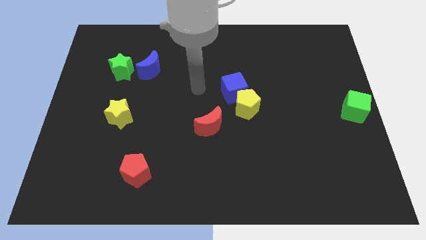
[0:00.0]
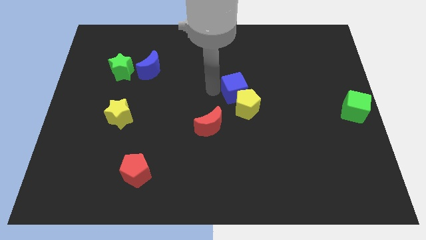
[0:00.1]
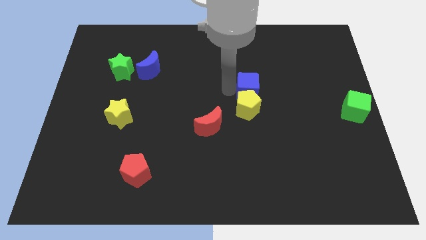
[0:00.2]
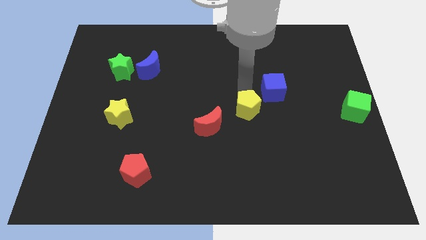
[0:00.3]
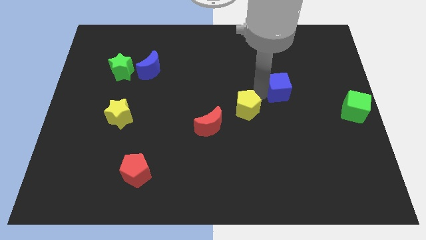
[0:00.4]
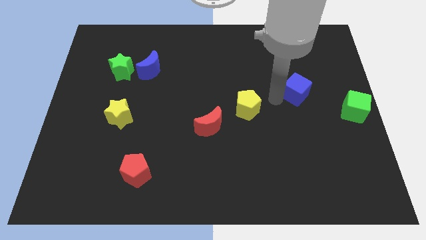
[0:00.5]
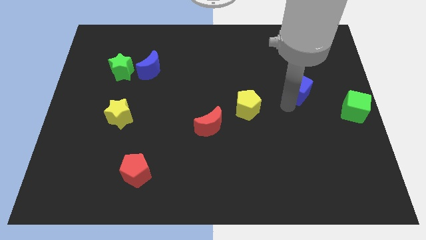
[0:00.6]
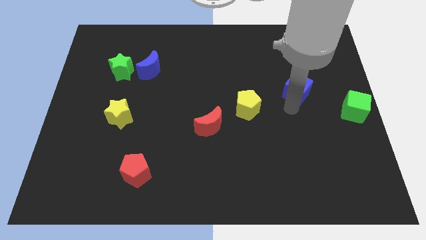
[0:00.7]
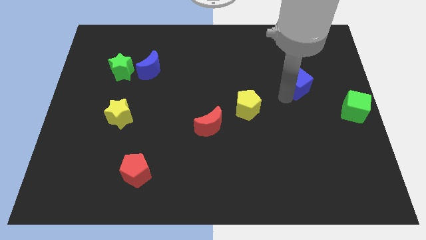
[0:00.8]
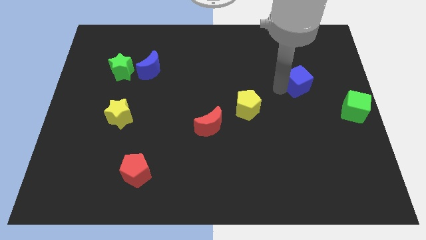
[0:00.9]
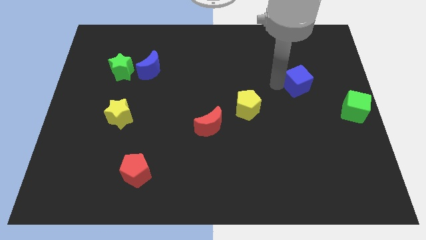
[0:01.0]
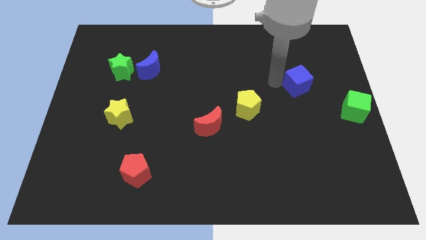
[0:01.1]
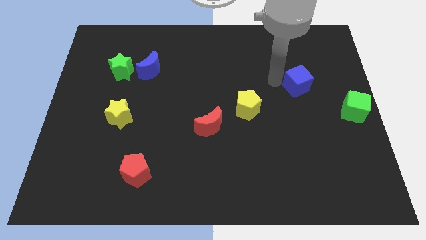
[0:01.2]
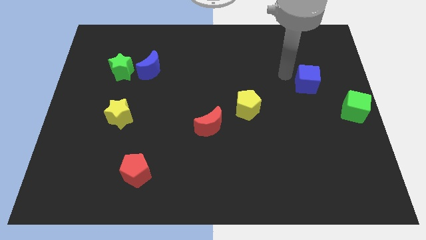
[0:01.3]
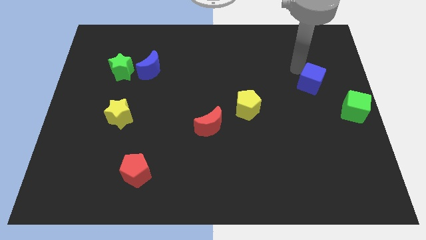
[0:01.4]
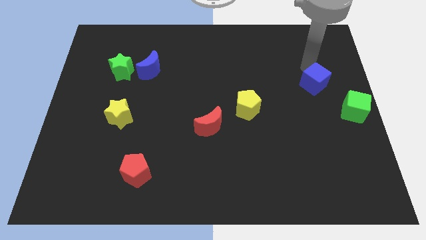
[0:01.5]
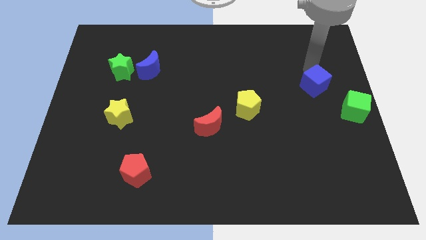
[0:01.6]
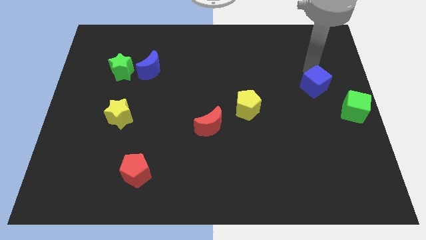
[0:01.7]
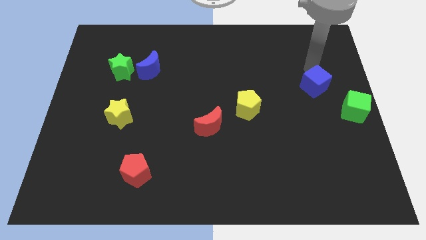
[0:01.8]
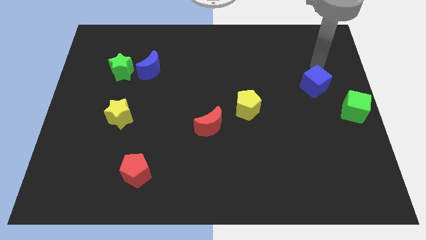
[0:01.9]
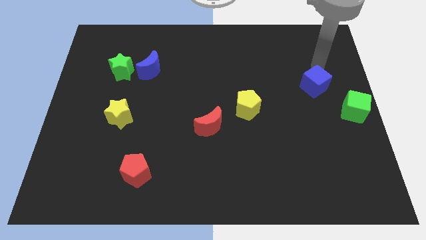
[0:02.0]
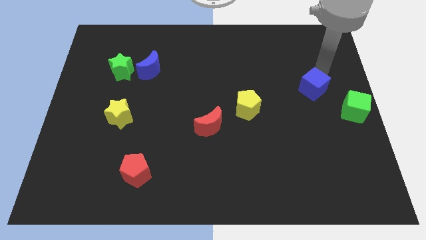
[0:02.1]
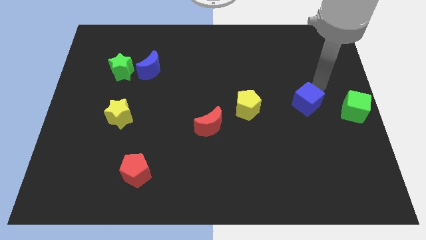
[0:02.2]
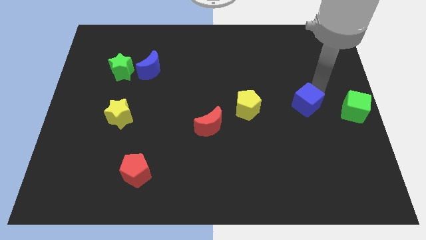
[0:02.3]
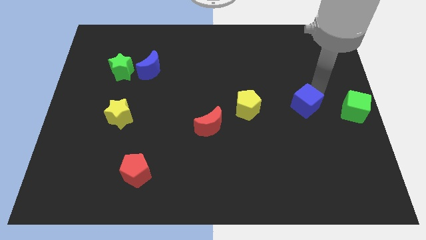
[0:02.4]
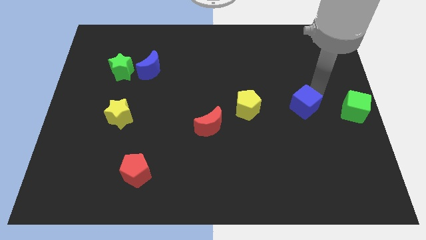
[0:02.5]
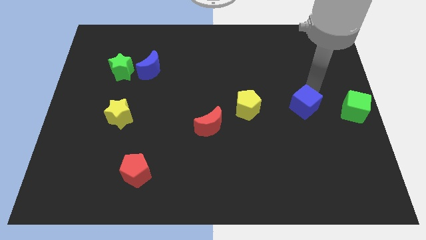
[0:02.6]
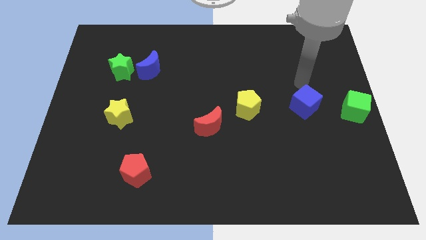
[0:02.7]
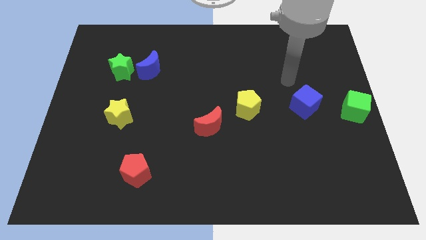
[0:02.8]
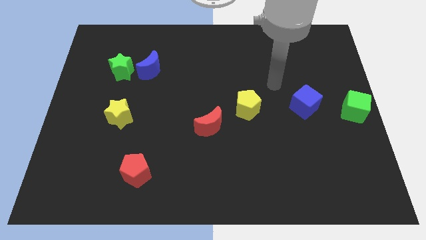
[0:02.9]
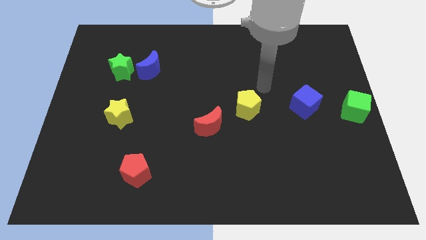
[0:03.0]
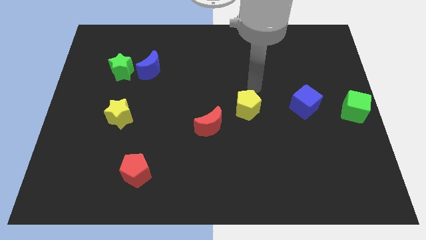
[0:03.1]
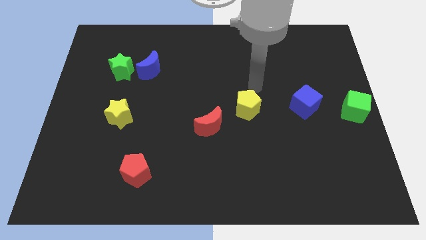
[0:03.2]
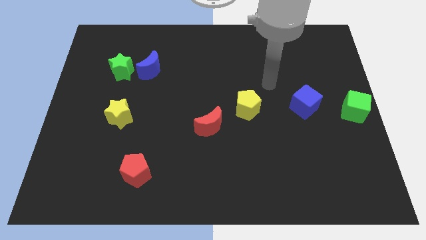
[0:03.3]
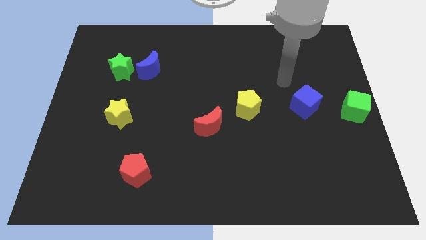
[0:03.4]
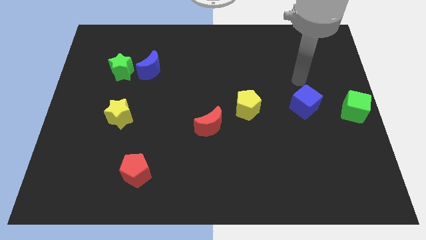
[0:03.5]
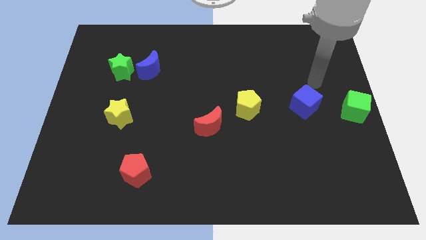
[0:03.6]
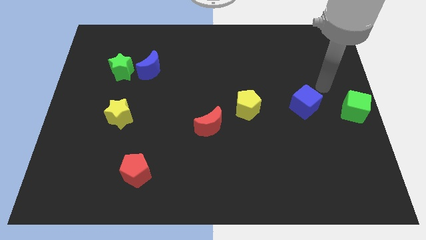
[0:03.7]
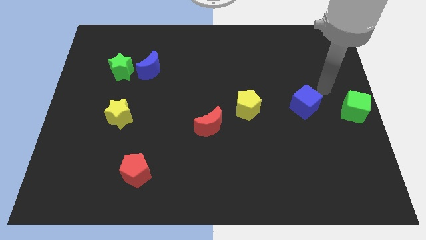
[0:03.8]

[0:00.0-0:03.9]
push the blue cube to the left of the green cube

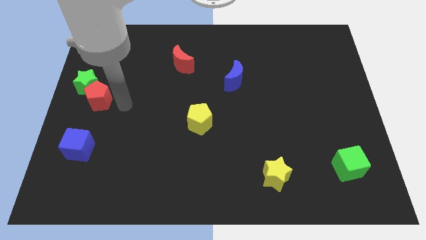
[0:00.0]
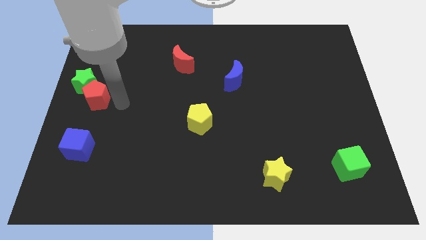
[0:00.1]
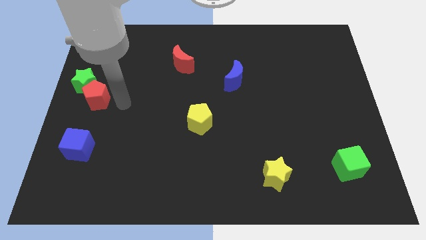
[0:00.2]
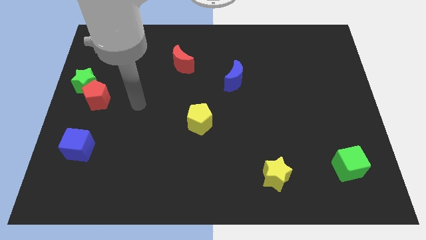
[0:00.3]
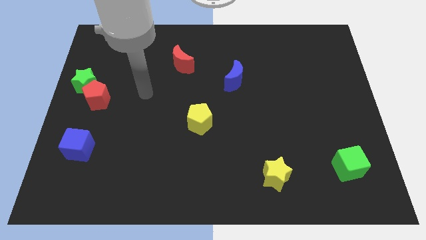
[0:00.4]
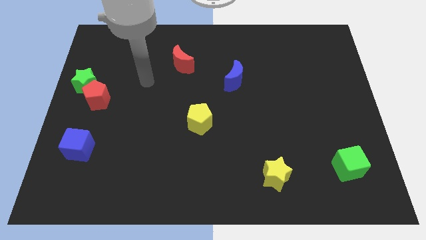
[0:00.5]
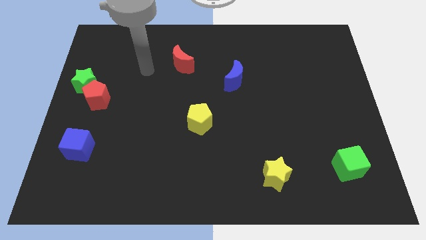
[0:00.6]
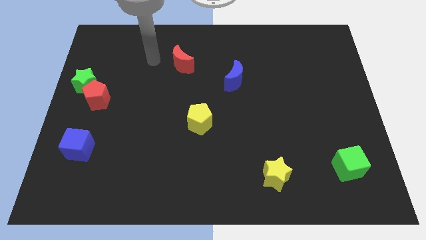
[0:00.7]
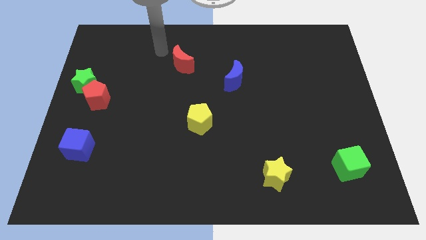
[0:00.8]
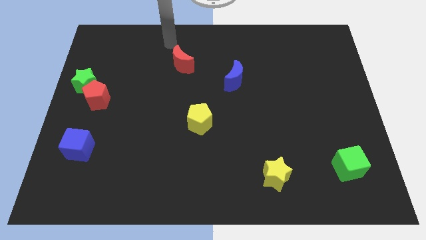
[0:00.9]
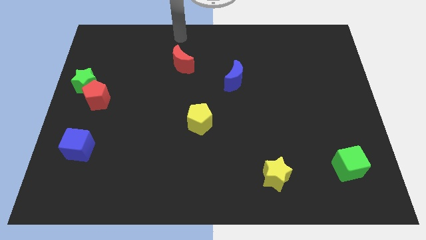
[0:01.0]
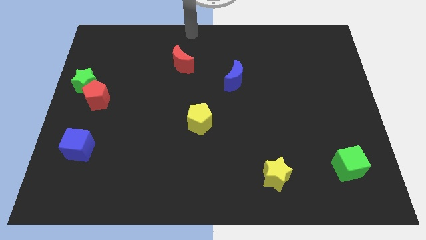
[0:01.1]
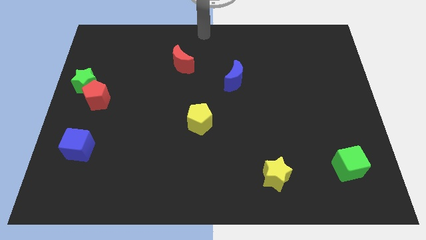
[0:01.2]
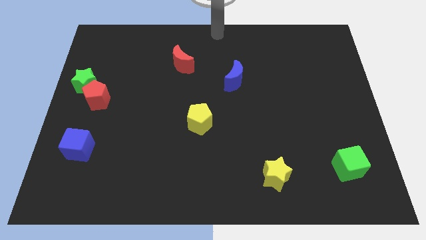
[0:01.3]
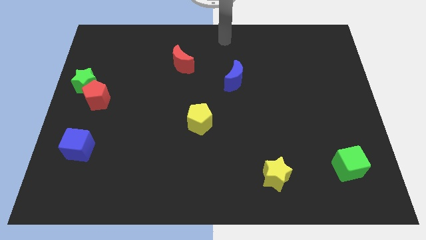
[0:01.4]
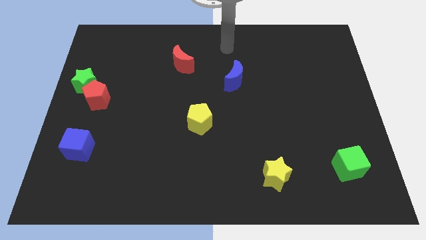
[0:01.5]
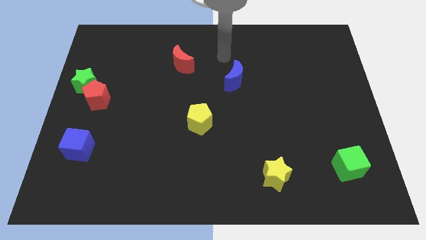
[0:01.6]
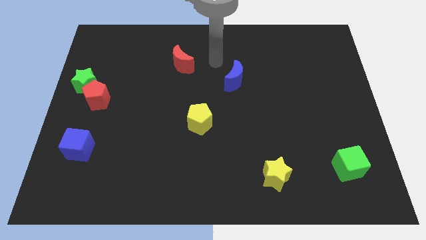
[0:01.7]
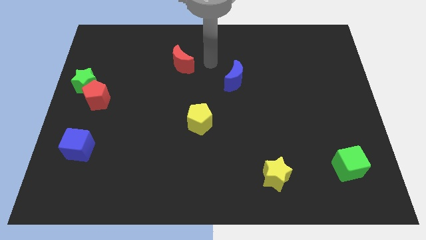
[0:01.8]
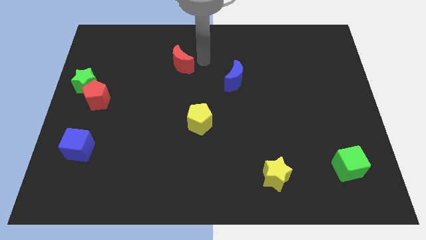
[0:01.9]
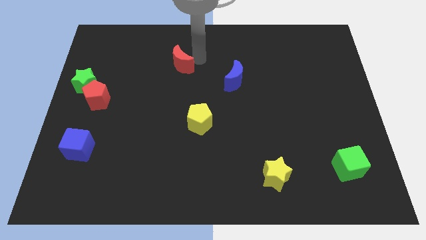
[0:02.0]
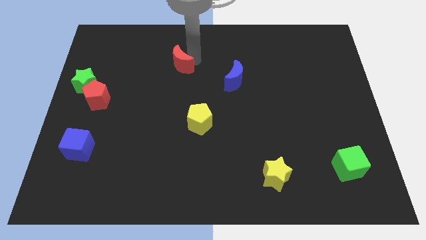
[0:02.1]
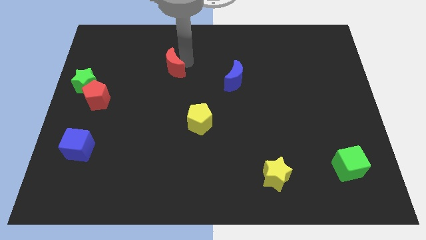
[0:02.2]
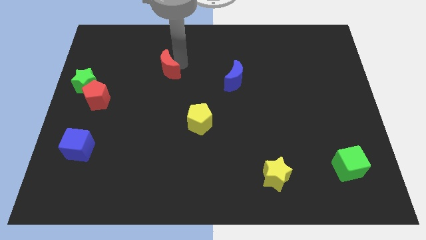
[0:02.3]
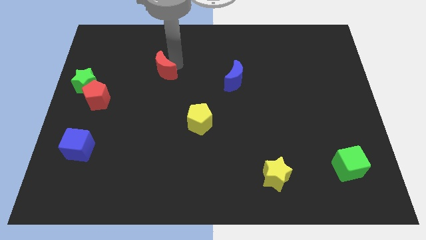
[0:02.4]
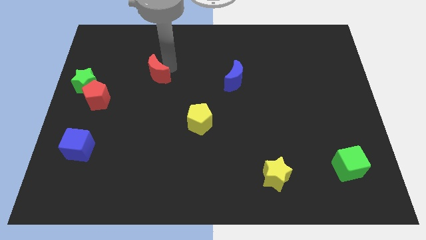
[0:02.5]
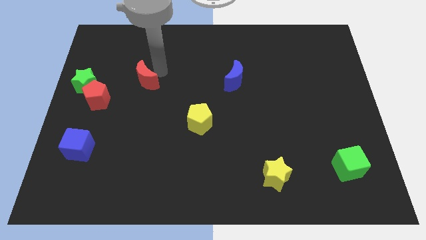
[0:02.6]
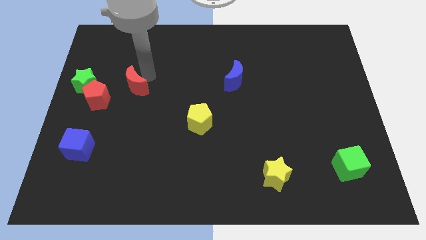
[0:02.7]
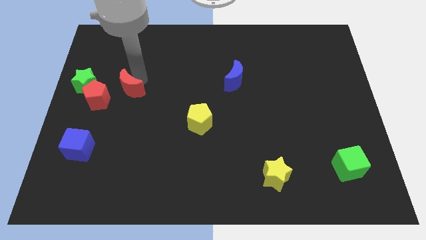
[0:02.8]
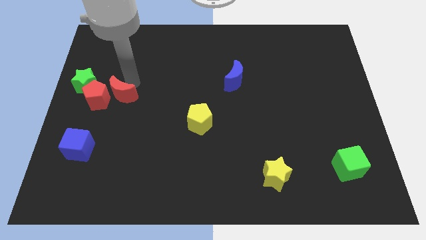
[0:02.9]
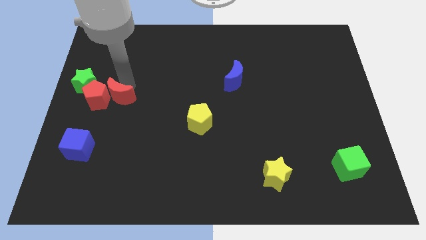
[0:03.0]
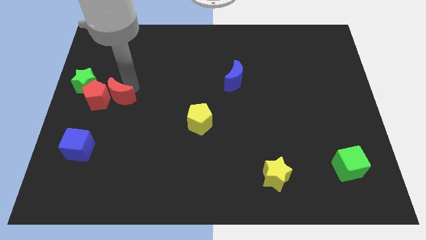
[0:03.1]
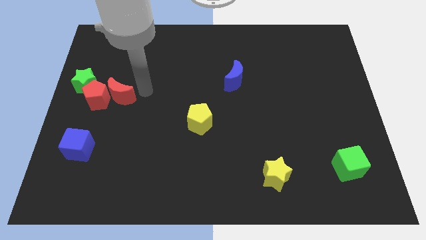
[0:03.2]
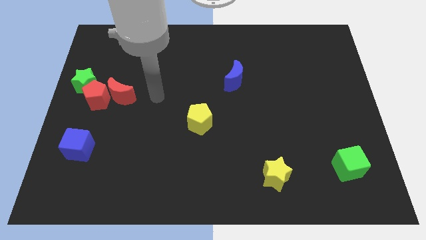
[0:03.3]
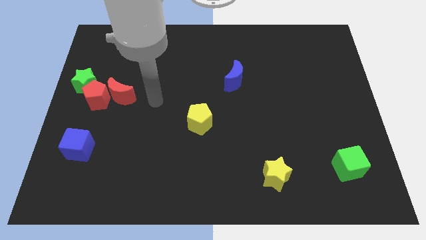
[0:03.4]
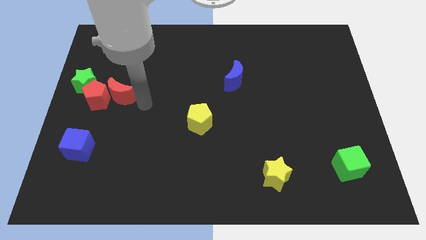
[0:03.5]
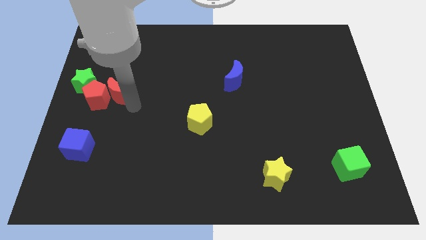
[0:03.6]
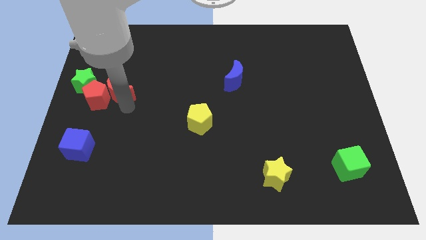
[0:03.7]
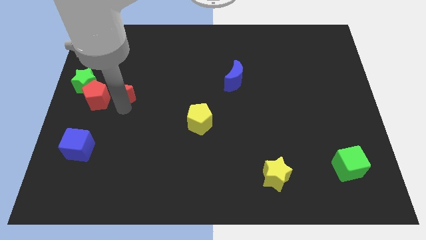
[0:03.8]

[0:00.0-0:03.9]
move your arm away from the red pentagon

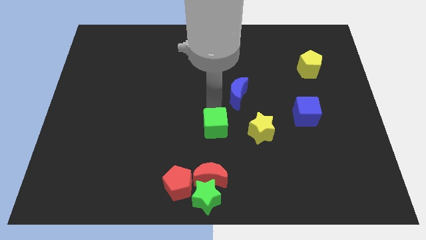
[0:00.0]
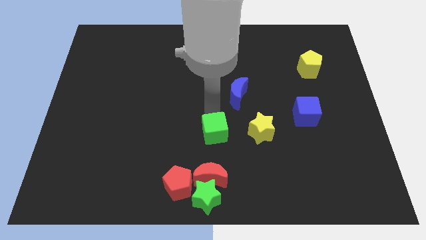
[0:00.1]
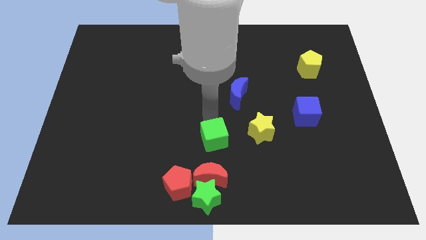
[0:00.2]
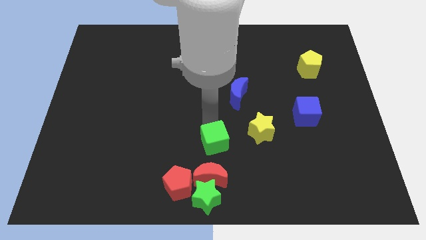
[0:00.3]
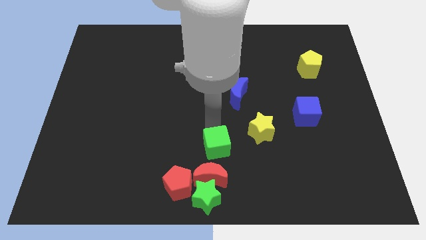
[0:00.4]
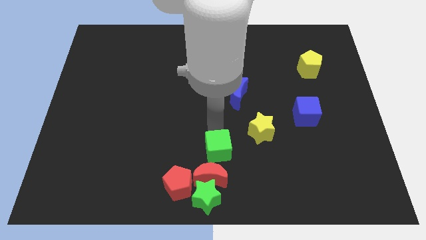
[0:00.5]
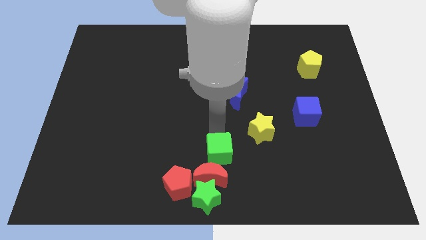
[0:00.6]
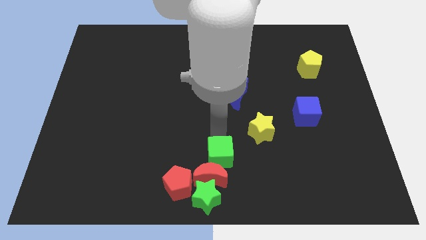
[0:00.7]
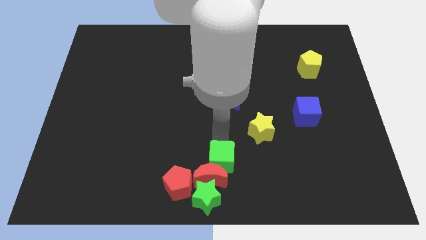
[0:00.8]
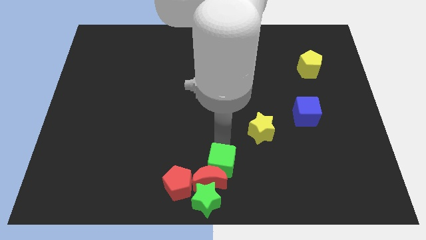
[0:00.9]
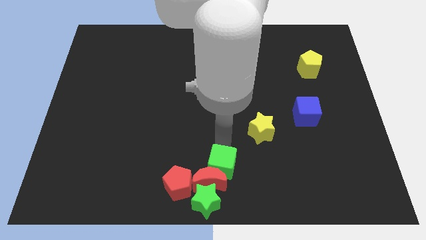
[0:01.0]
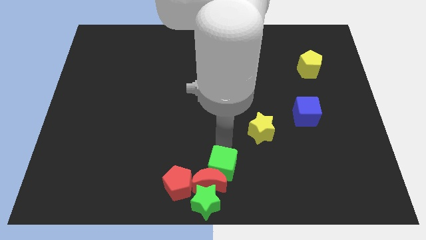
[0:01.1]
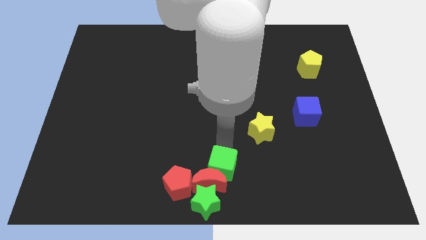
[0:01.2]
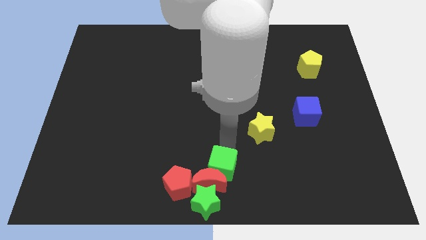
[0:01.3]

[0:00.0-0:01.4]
place the green cube at the top right side of the red crescent
